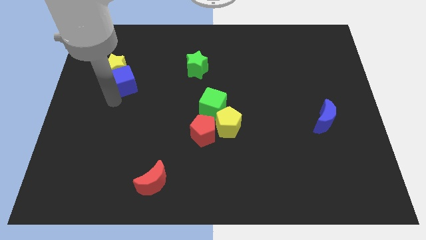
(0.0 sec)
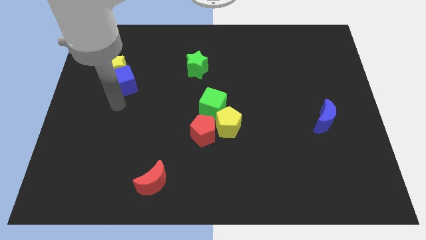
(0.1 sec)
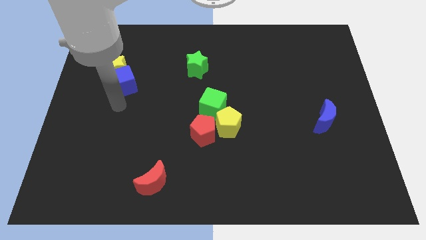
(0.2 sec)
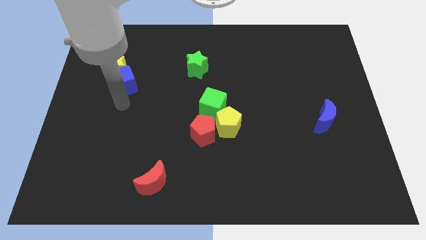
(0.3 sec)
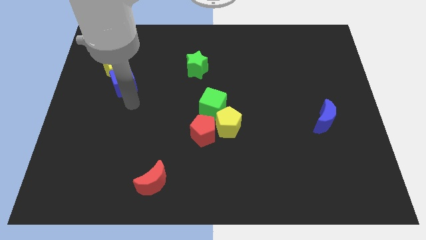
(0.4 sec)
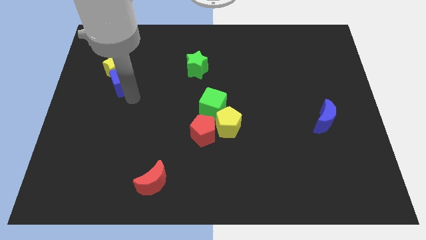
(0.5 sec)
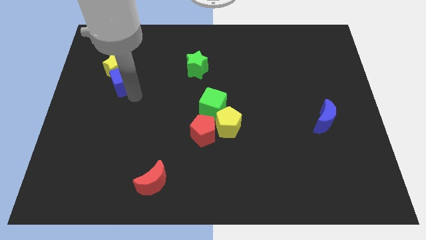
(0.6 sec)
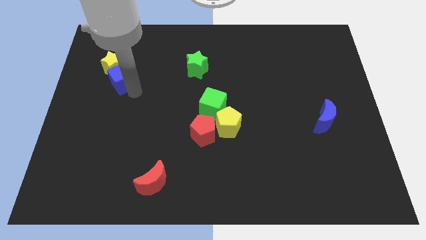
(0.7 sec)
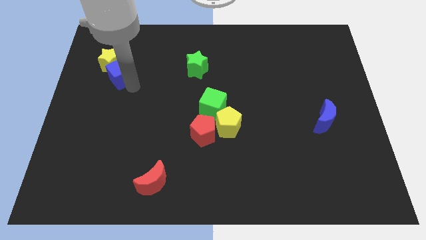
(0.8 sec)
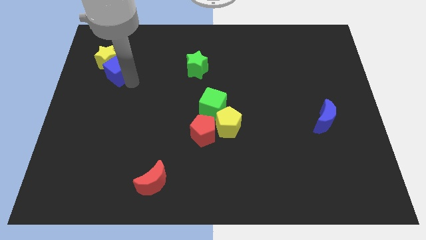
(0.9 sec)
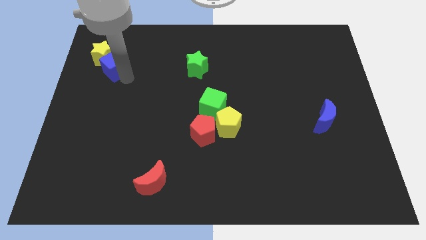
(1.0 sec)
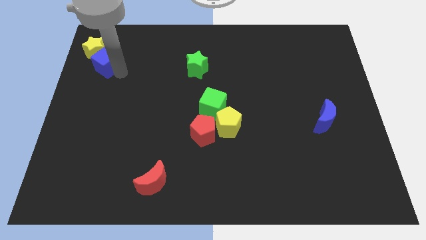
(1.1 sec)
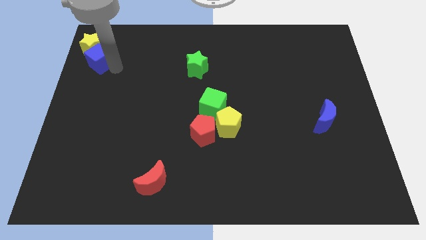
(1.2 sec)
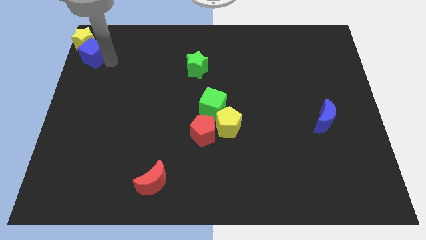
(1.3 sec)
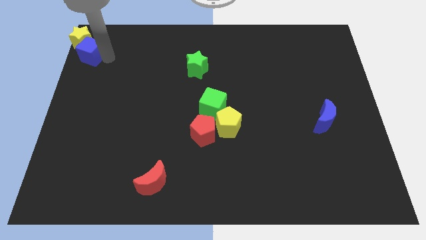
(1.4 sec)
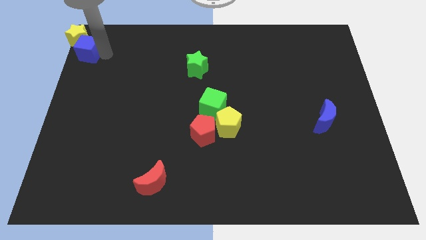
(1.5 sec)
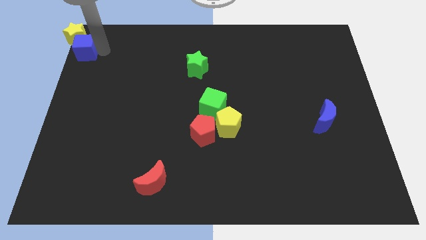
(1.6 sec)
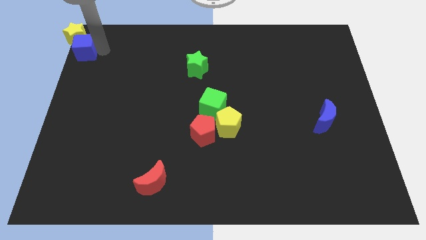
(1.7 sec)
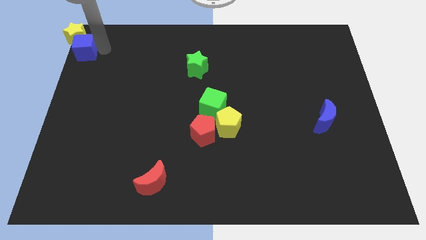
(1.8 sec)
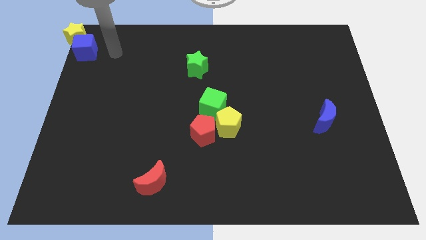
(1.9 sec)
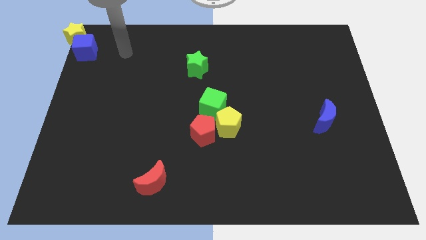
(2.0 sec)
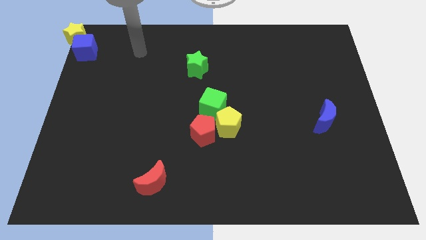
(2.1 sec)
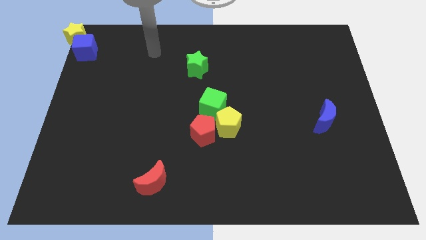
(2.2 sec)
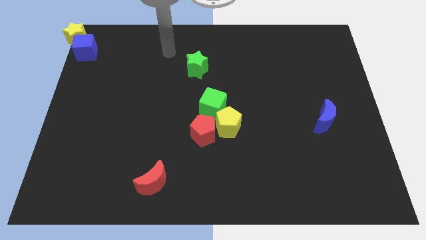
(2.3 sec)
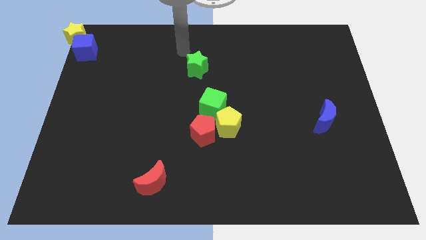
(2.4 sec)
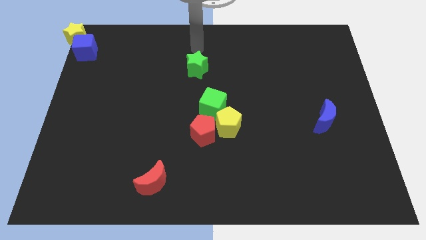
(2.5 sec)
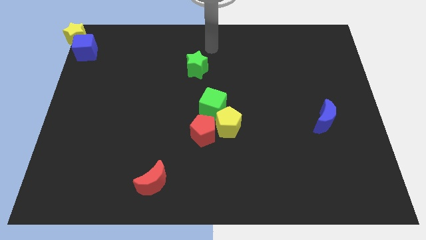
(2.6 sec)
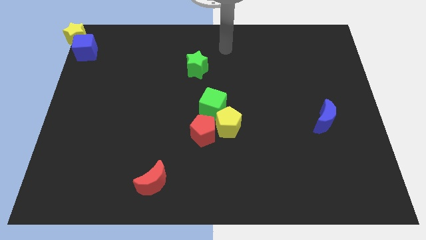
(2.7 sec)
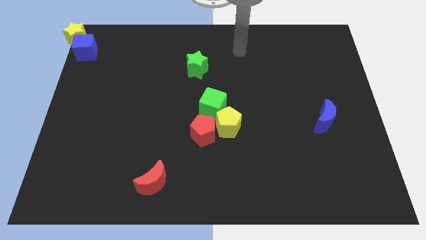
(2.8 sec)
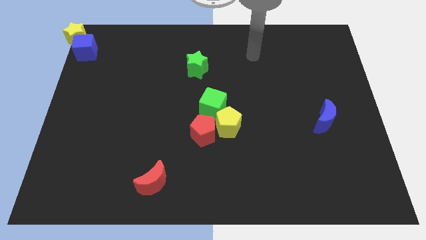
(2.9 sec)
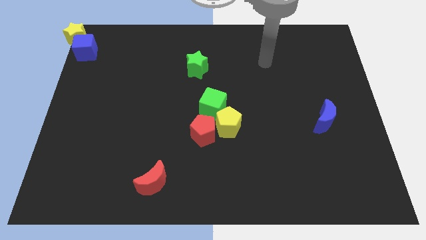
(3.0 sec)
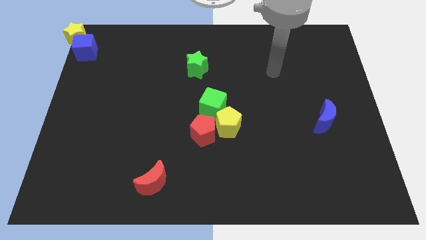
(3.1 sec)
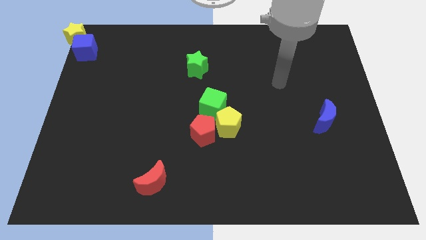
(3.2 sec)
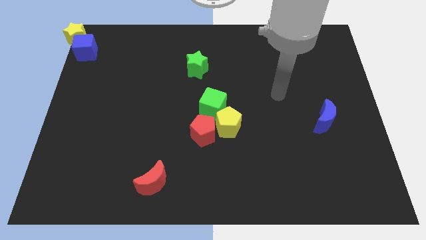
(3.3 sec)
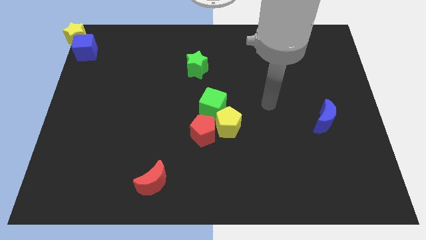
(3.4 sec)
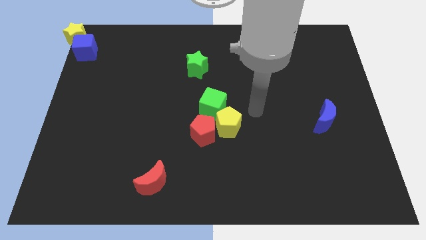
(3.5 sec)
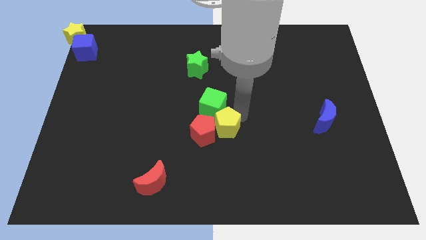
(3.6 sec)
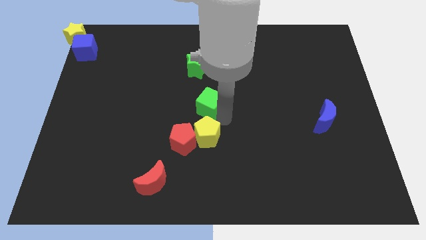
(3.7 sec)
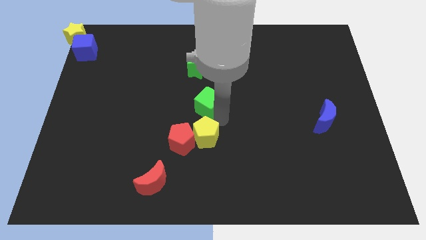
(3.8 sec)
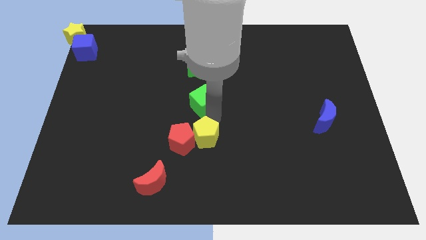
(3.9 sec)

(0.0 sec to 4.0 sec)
separate green cube and yellow pentagon

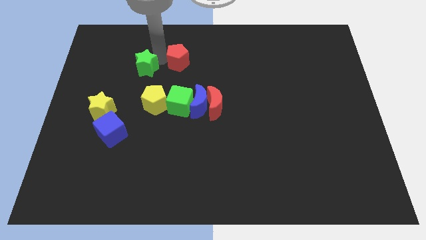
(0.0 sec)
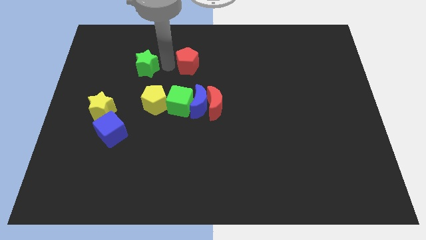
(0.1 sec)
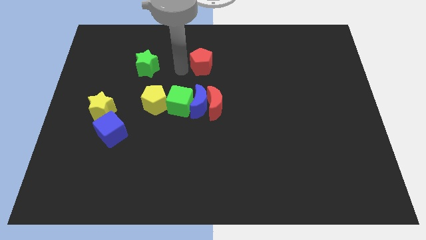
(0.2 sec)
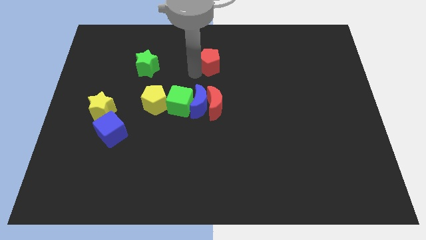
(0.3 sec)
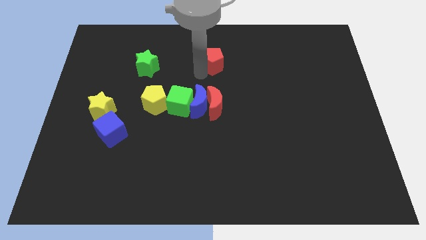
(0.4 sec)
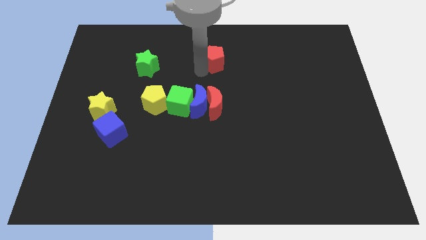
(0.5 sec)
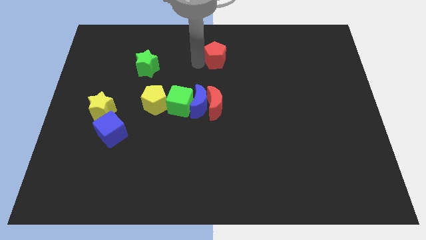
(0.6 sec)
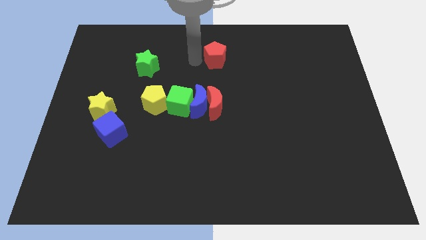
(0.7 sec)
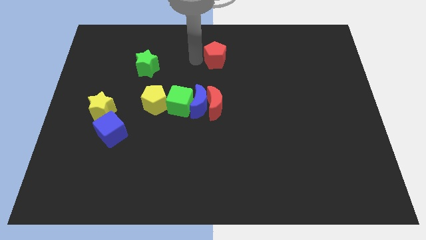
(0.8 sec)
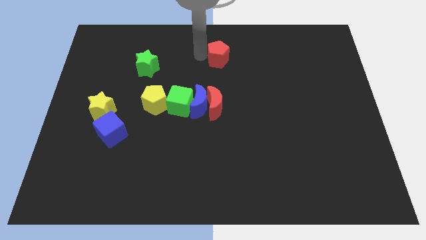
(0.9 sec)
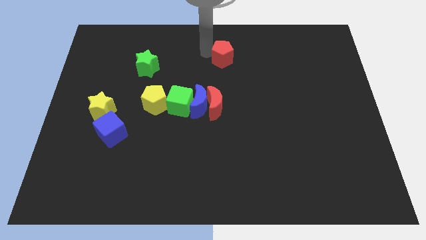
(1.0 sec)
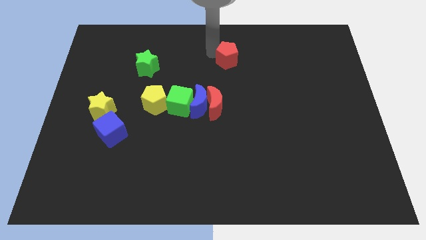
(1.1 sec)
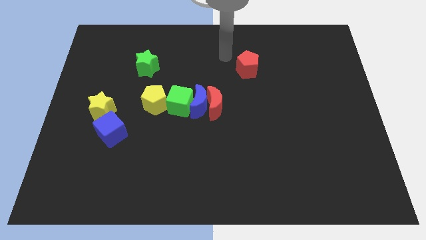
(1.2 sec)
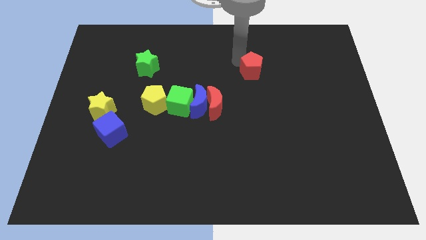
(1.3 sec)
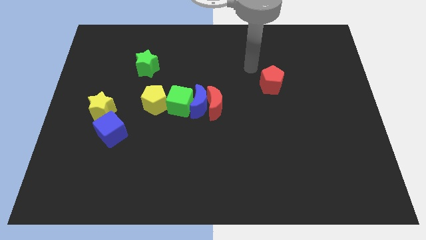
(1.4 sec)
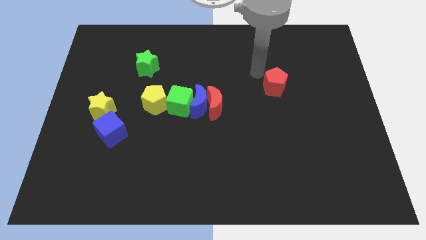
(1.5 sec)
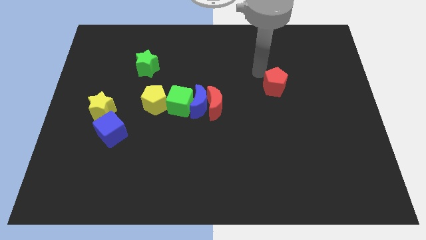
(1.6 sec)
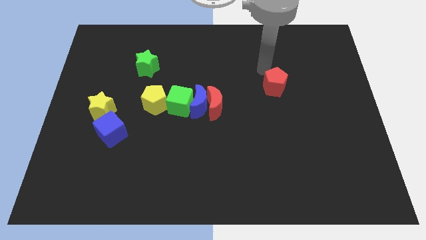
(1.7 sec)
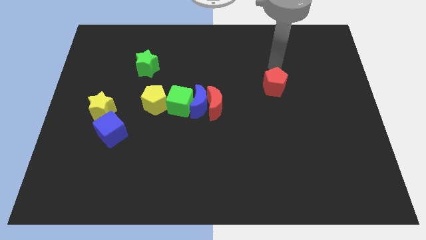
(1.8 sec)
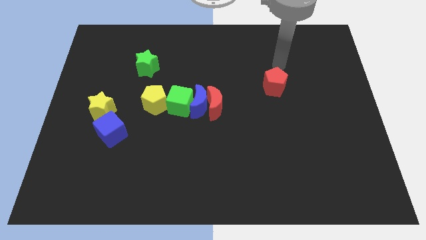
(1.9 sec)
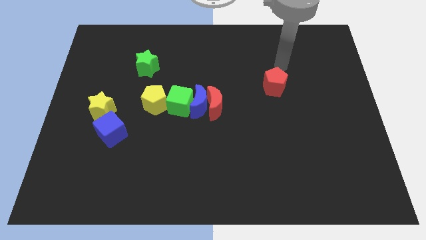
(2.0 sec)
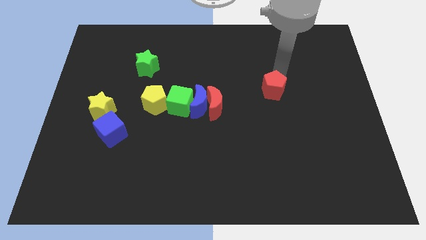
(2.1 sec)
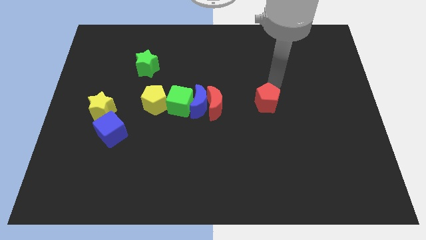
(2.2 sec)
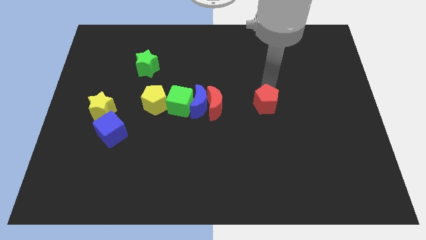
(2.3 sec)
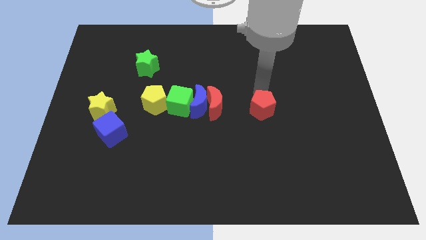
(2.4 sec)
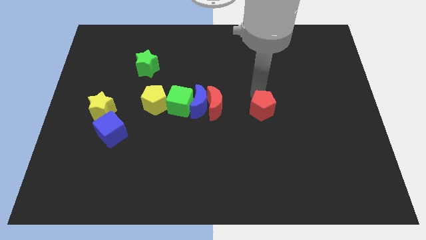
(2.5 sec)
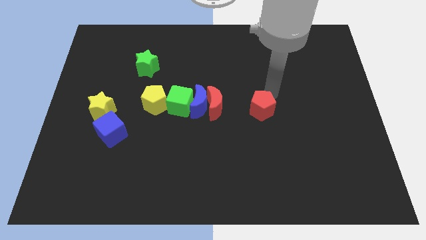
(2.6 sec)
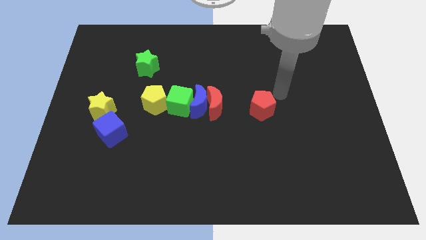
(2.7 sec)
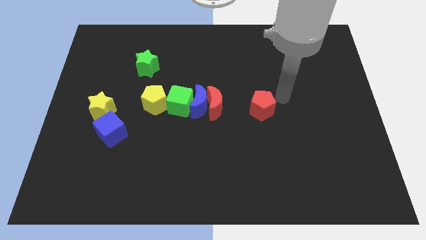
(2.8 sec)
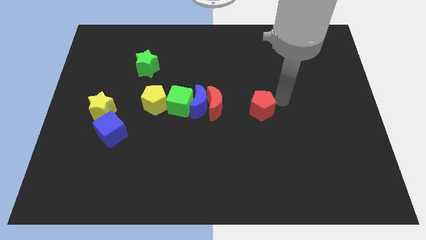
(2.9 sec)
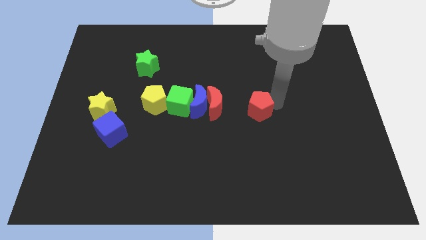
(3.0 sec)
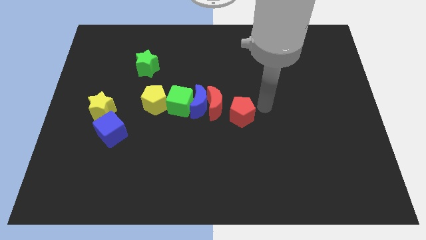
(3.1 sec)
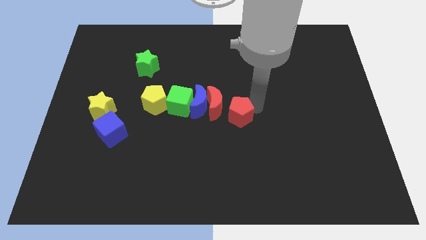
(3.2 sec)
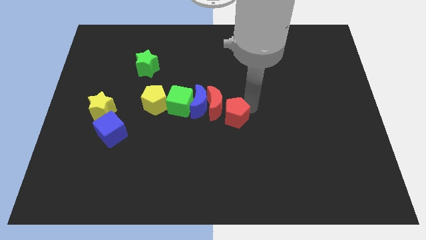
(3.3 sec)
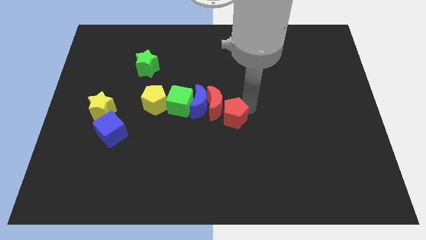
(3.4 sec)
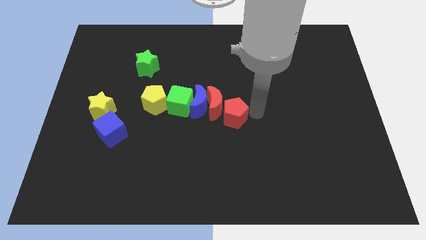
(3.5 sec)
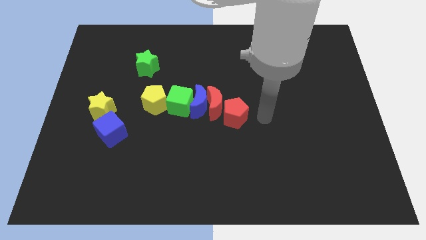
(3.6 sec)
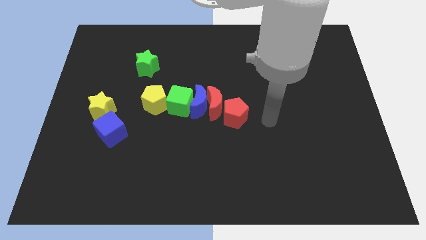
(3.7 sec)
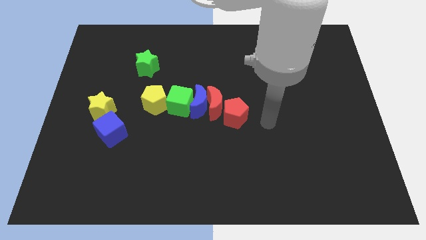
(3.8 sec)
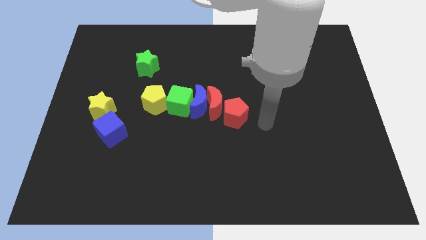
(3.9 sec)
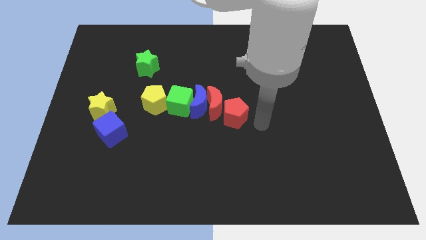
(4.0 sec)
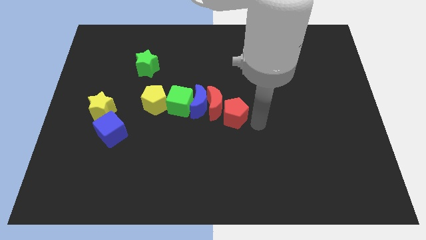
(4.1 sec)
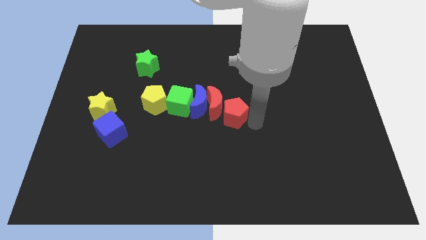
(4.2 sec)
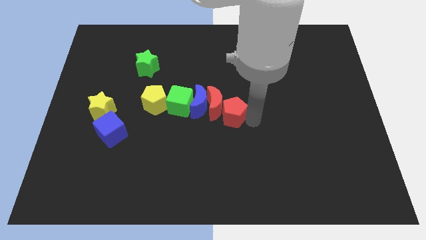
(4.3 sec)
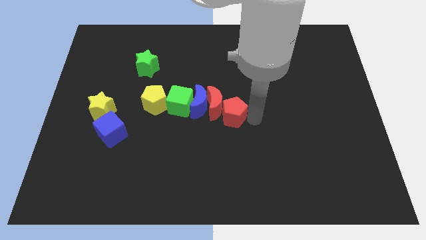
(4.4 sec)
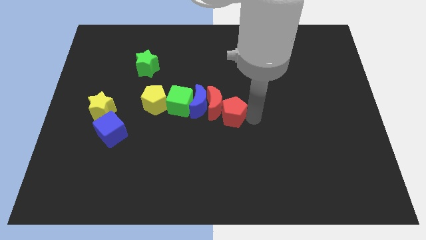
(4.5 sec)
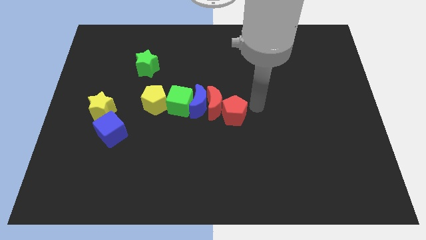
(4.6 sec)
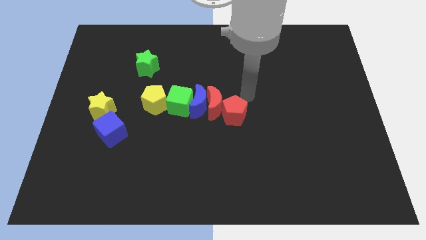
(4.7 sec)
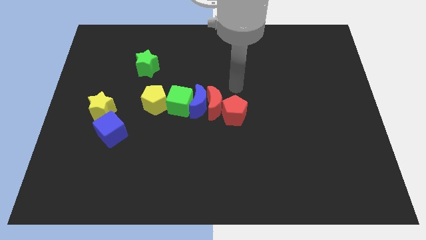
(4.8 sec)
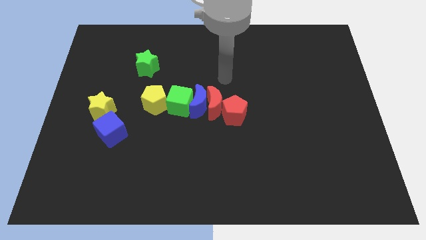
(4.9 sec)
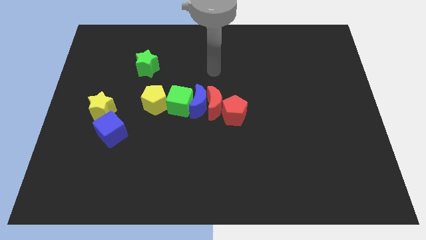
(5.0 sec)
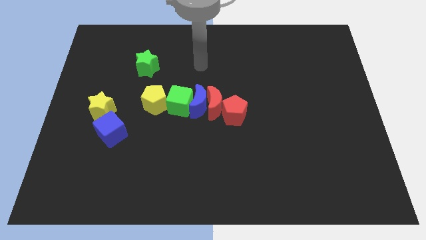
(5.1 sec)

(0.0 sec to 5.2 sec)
move red pentagon into red moon
